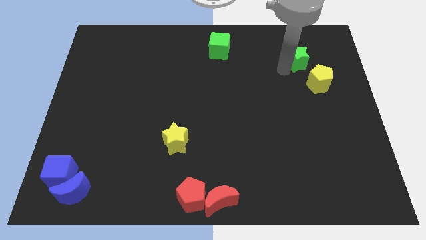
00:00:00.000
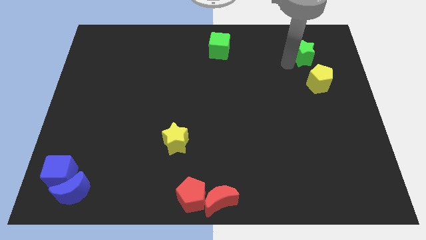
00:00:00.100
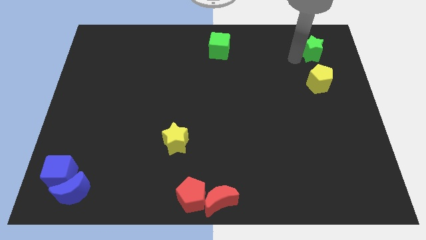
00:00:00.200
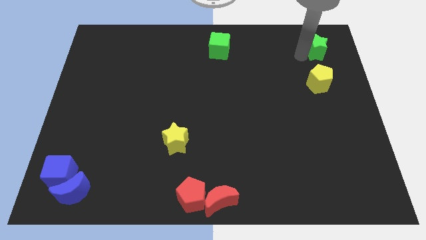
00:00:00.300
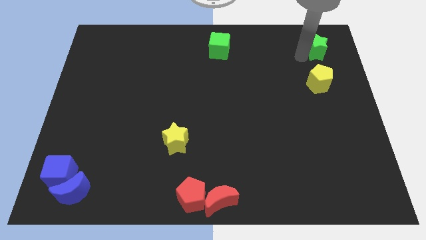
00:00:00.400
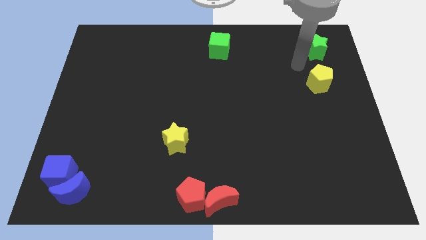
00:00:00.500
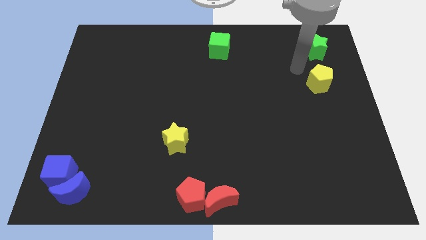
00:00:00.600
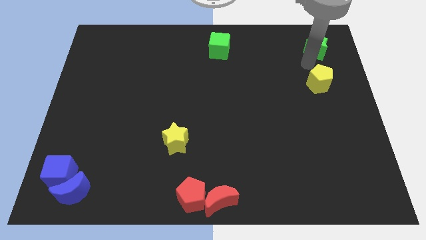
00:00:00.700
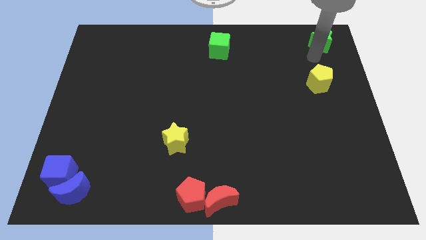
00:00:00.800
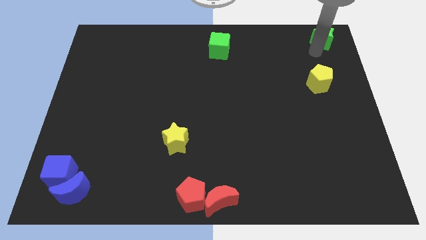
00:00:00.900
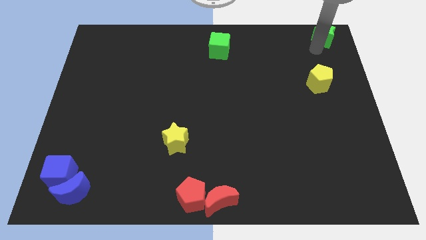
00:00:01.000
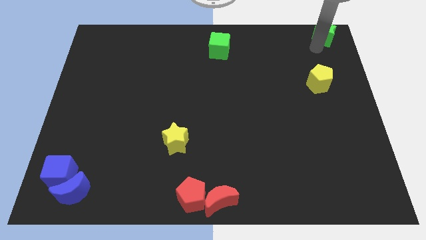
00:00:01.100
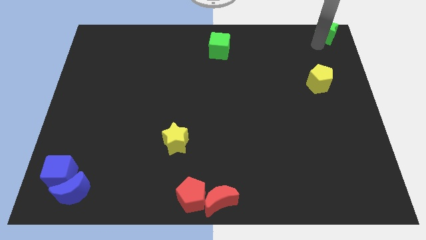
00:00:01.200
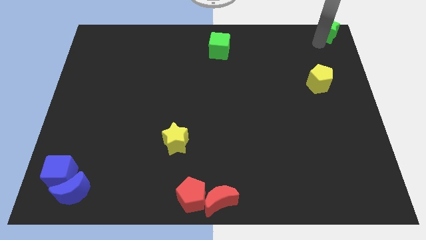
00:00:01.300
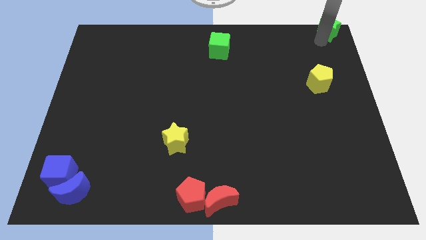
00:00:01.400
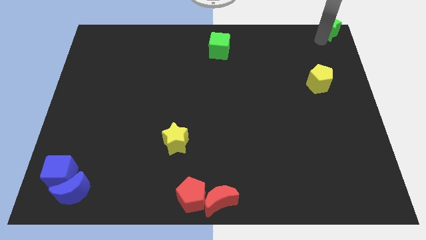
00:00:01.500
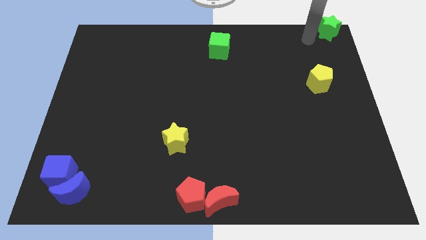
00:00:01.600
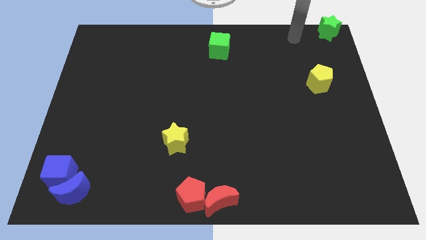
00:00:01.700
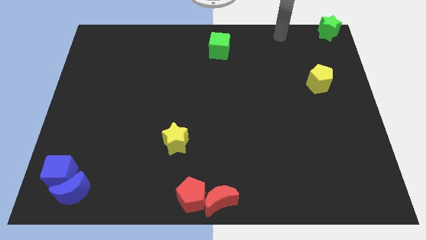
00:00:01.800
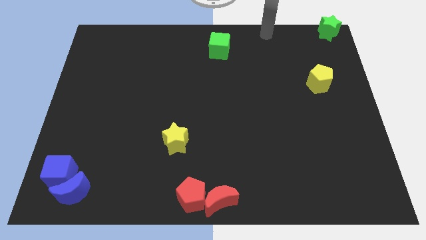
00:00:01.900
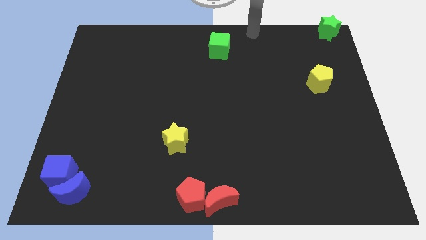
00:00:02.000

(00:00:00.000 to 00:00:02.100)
slide green star to the top right corner of the board

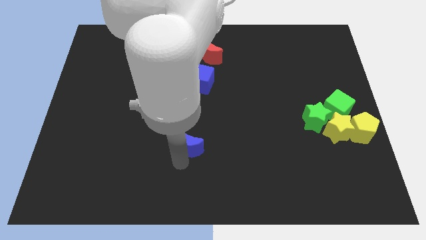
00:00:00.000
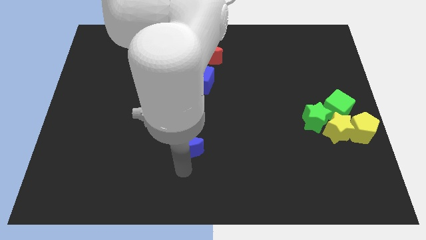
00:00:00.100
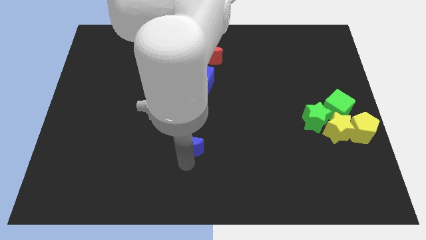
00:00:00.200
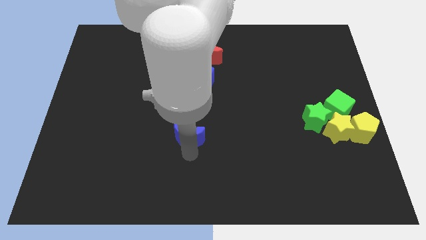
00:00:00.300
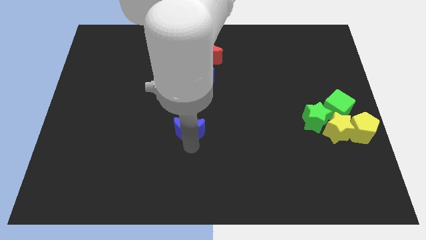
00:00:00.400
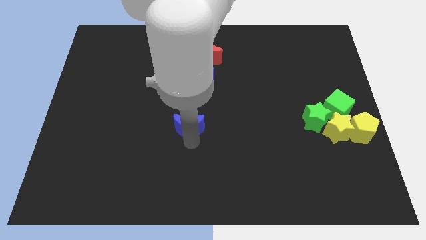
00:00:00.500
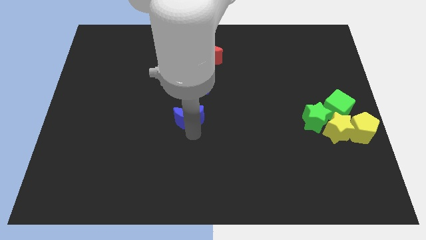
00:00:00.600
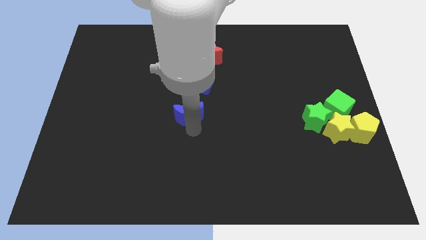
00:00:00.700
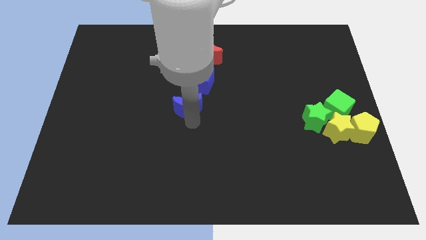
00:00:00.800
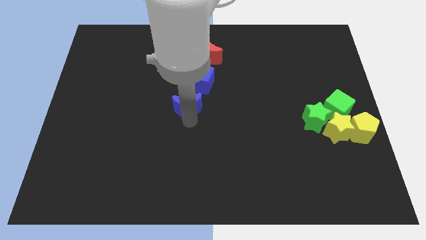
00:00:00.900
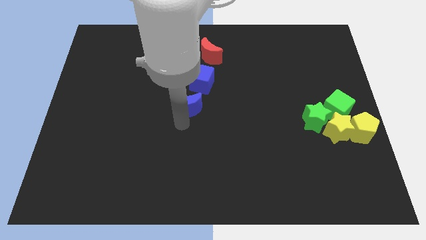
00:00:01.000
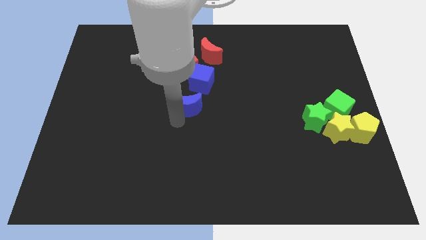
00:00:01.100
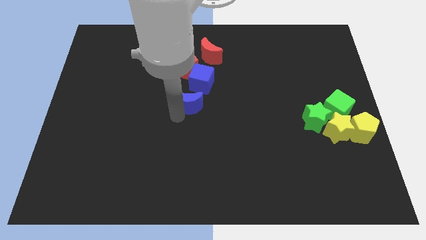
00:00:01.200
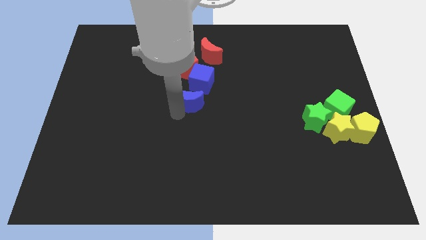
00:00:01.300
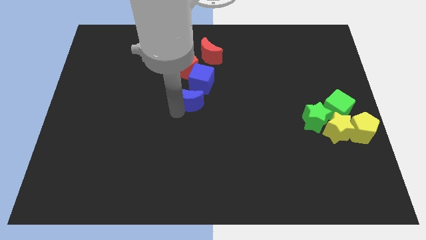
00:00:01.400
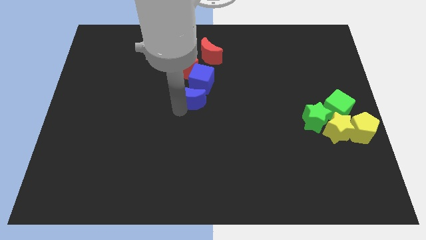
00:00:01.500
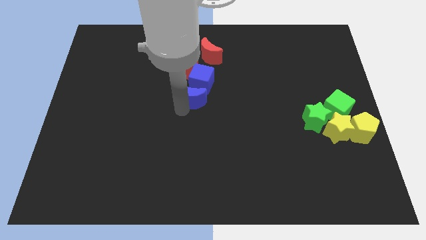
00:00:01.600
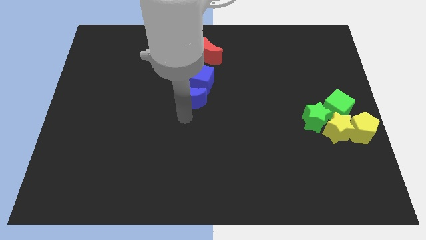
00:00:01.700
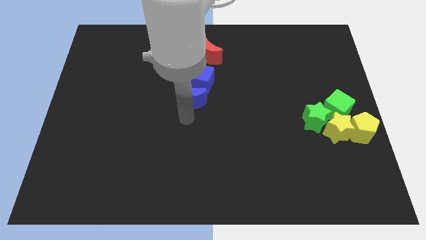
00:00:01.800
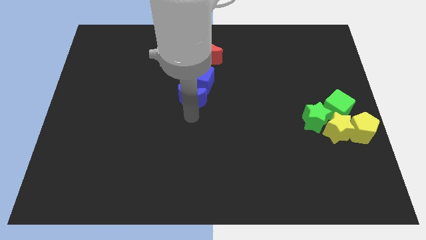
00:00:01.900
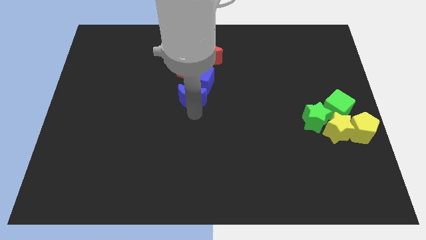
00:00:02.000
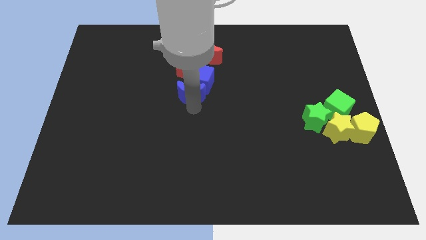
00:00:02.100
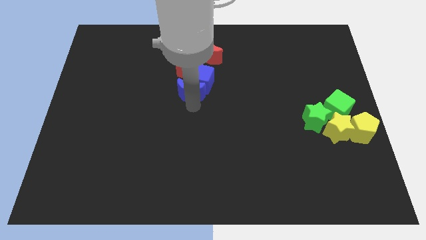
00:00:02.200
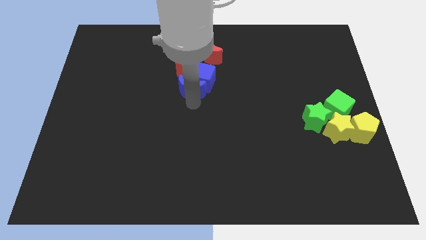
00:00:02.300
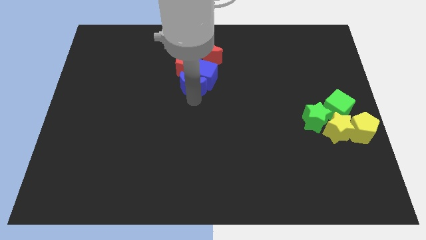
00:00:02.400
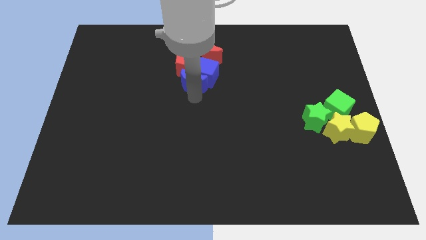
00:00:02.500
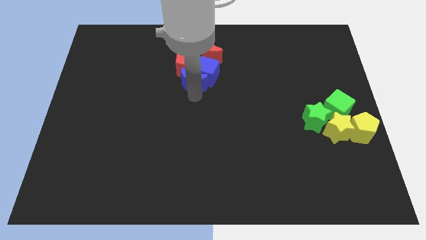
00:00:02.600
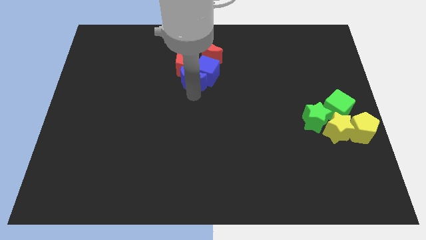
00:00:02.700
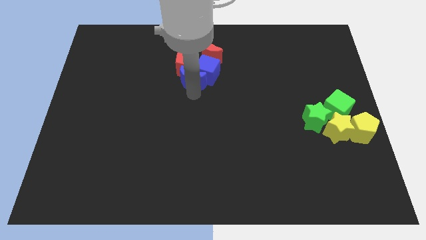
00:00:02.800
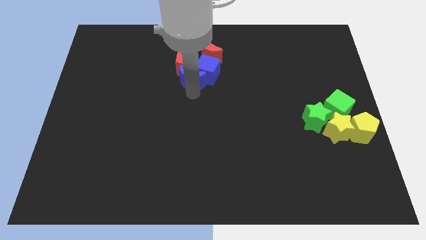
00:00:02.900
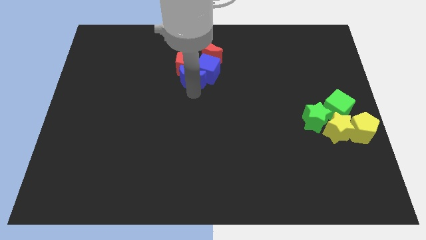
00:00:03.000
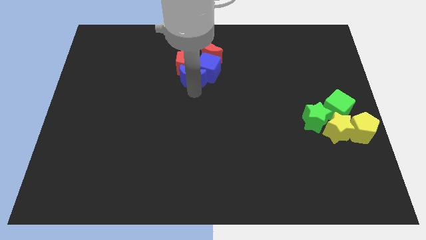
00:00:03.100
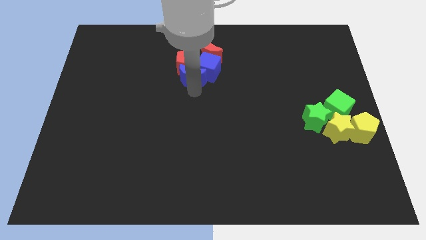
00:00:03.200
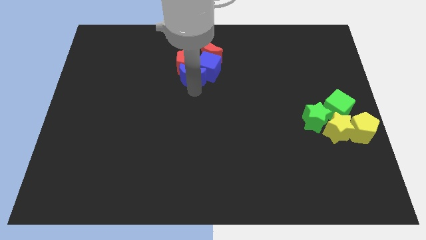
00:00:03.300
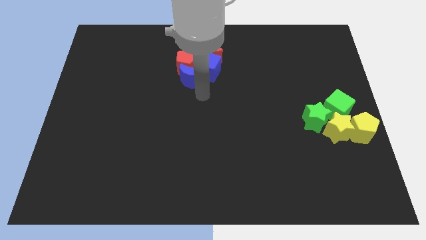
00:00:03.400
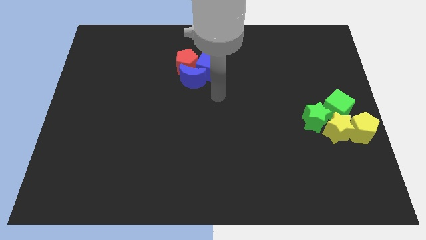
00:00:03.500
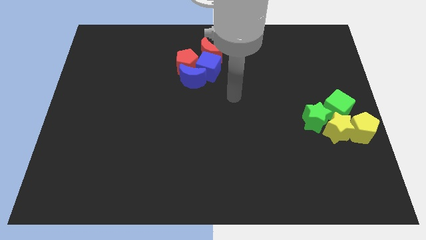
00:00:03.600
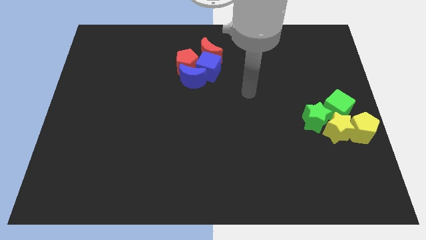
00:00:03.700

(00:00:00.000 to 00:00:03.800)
push the blue blocks into the red blocks

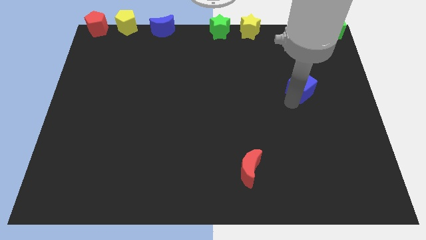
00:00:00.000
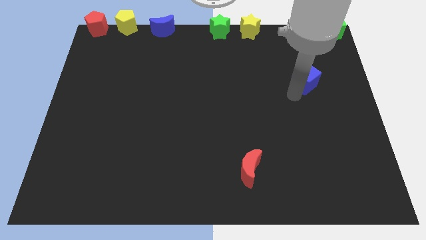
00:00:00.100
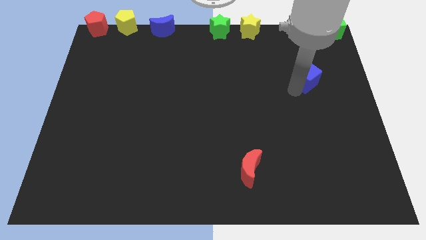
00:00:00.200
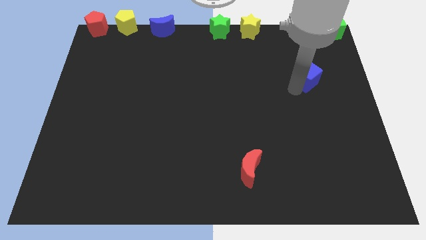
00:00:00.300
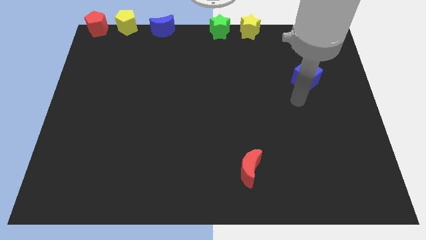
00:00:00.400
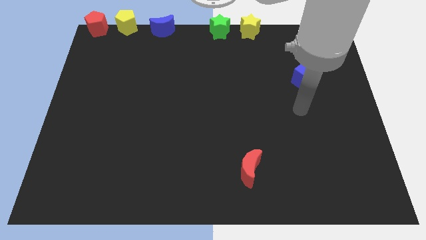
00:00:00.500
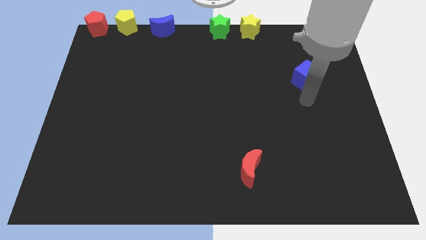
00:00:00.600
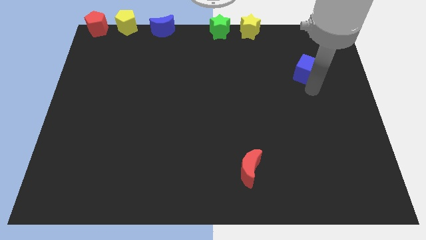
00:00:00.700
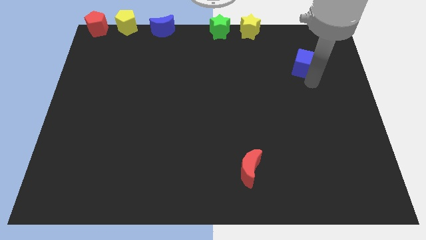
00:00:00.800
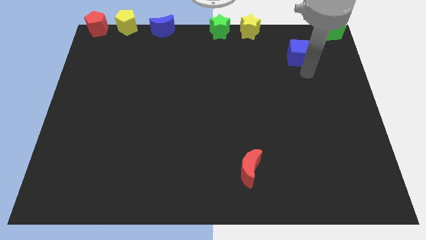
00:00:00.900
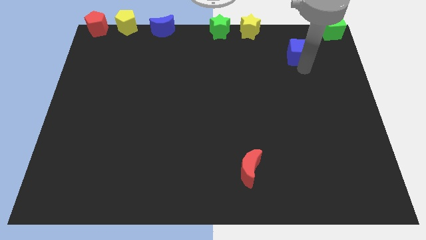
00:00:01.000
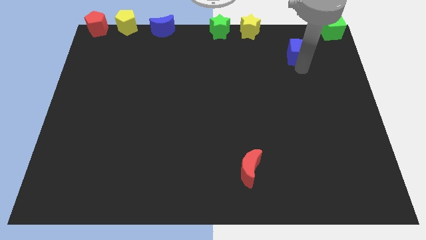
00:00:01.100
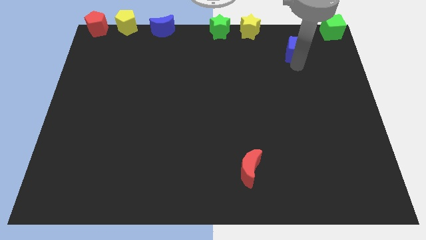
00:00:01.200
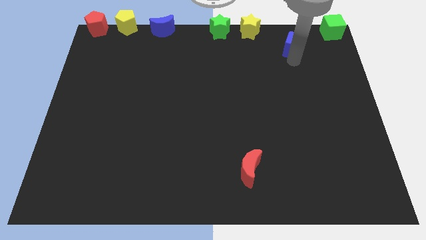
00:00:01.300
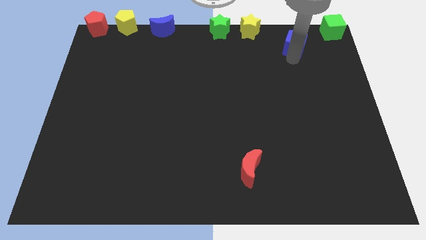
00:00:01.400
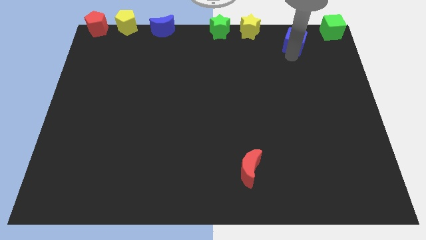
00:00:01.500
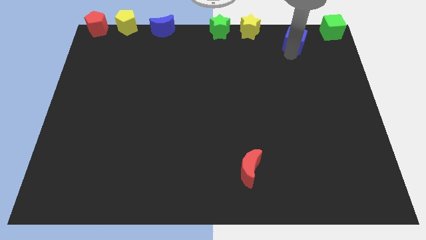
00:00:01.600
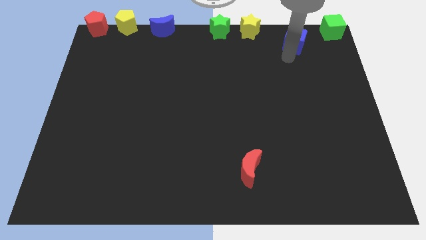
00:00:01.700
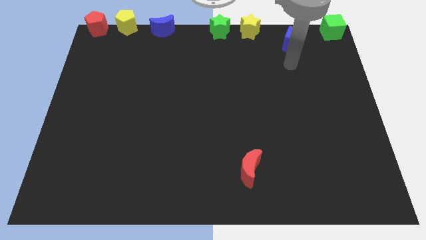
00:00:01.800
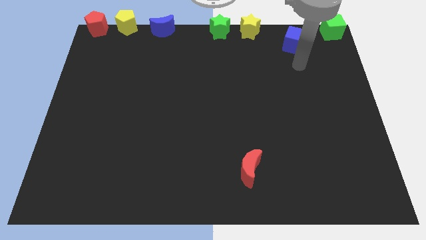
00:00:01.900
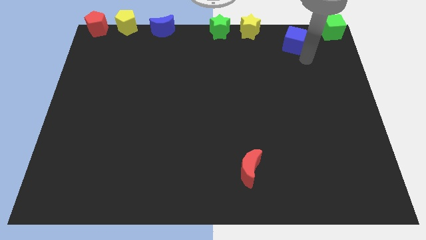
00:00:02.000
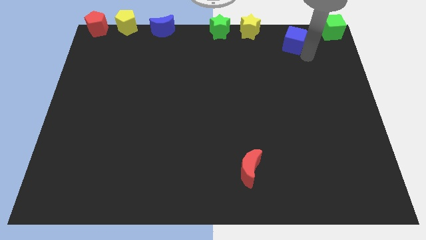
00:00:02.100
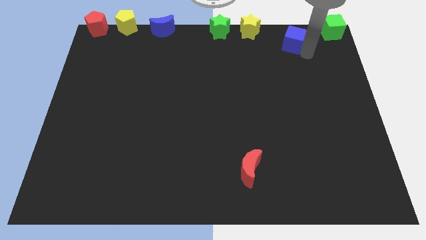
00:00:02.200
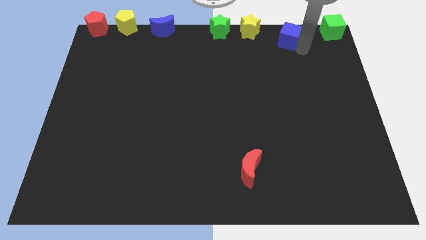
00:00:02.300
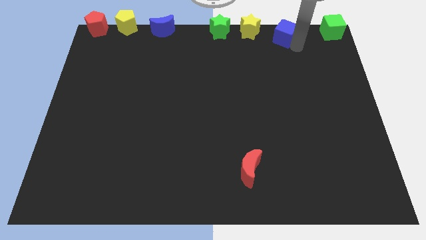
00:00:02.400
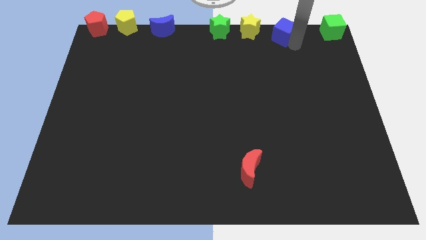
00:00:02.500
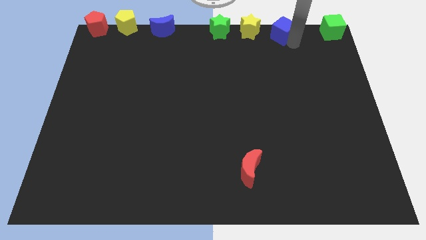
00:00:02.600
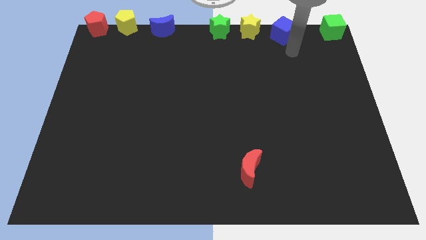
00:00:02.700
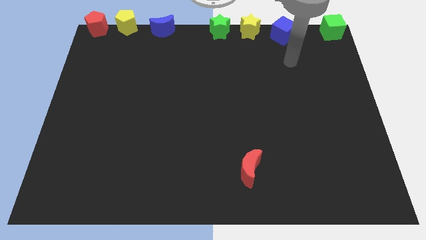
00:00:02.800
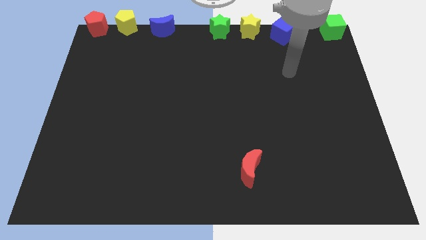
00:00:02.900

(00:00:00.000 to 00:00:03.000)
place blue cube beside yellow star

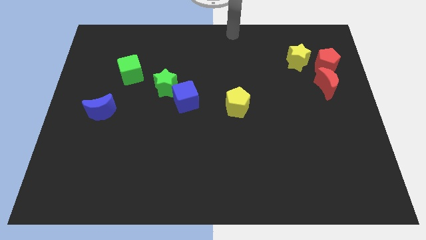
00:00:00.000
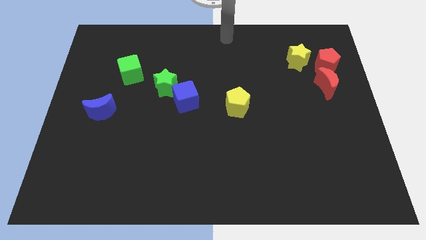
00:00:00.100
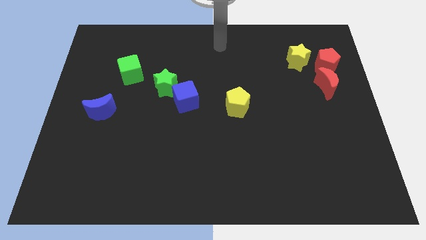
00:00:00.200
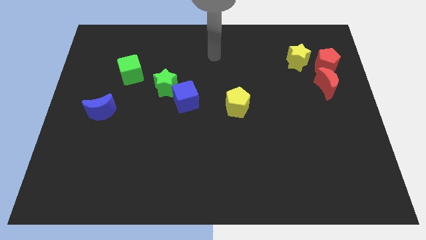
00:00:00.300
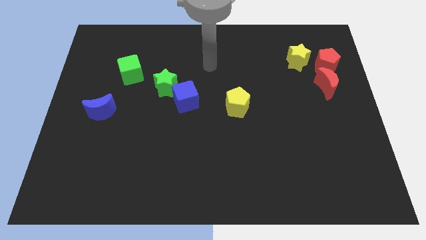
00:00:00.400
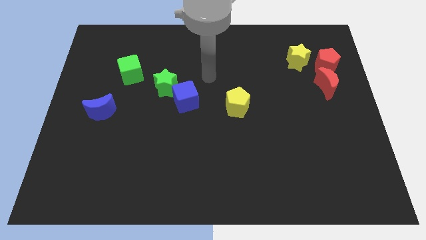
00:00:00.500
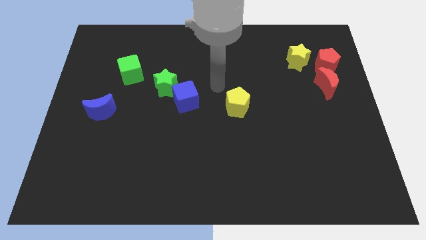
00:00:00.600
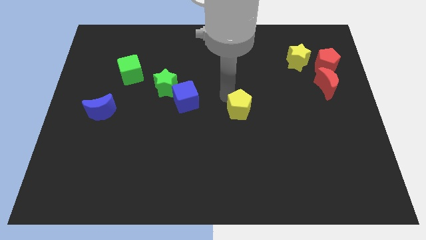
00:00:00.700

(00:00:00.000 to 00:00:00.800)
move your arm close to the yellow pentagon
